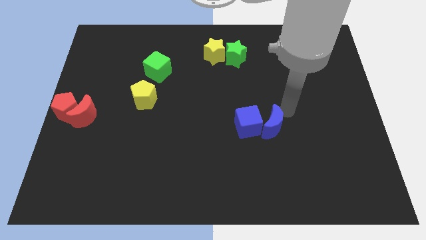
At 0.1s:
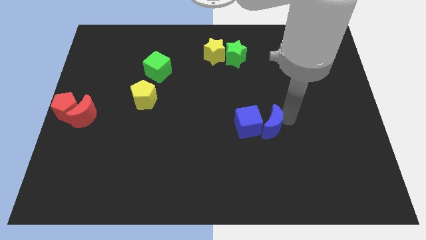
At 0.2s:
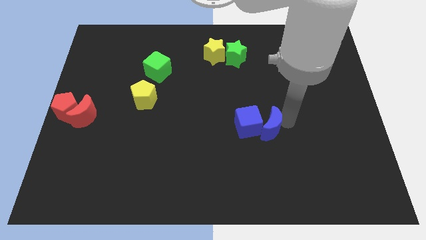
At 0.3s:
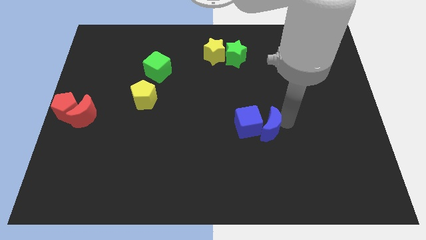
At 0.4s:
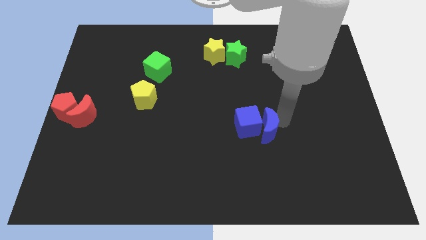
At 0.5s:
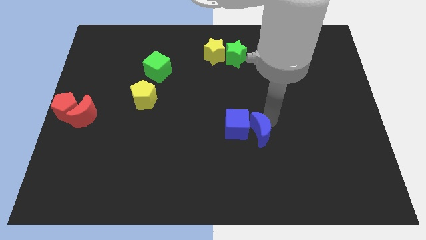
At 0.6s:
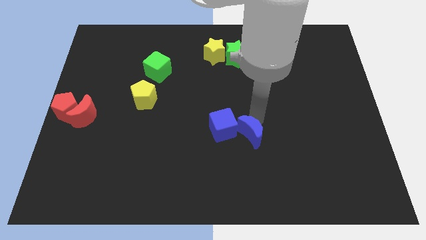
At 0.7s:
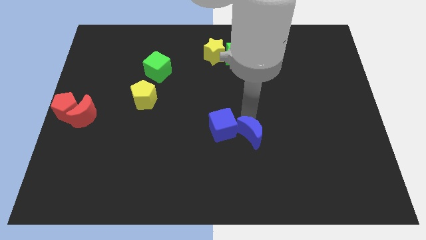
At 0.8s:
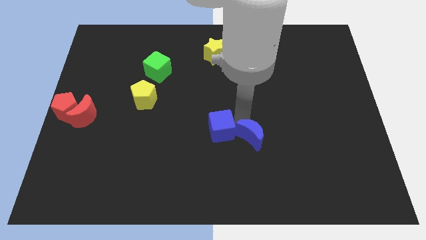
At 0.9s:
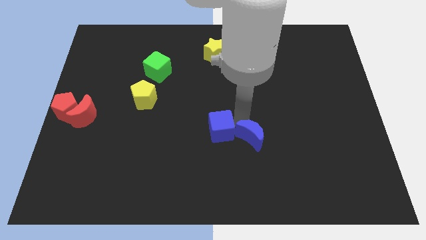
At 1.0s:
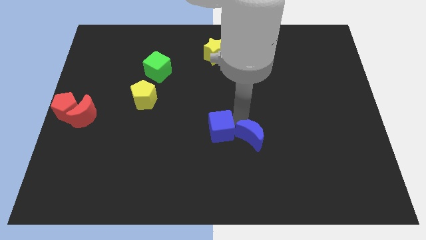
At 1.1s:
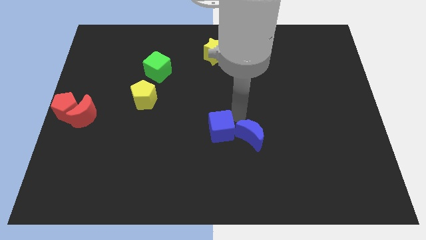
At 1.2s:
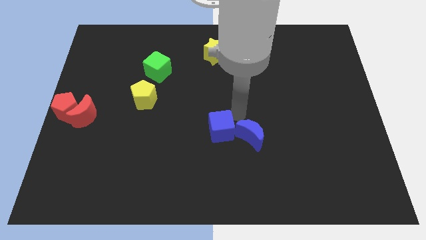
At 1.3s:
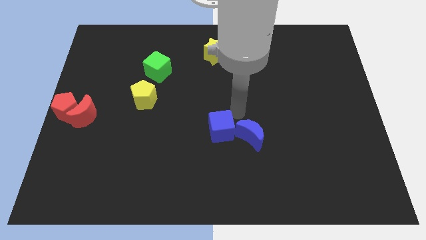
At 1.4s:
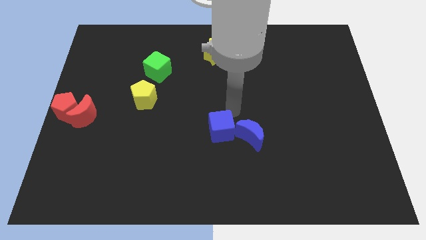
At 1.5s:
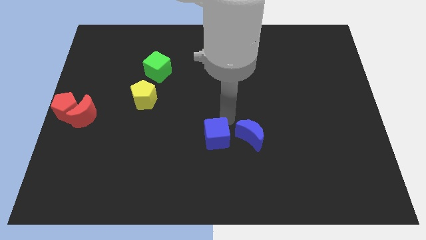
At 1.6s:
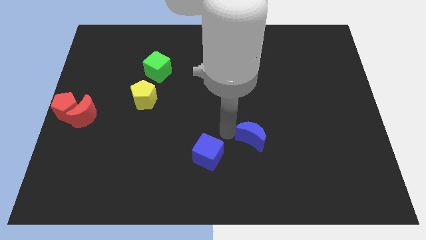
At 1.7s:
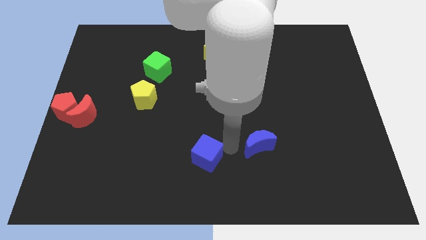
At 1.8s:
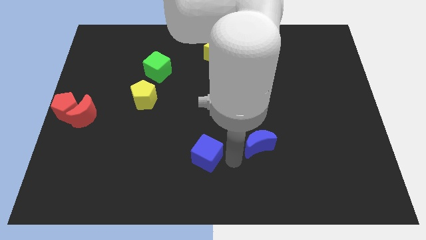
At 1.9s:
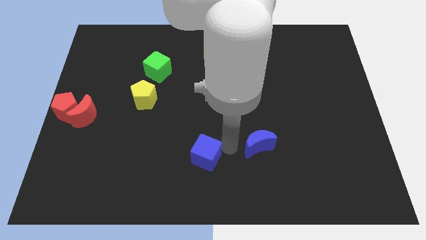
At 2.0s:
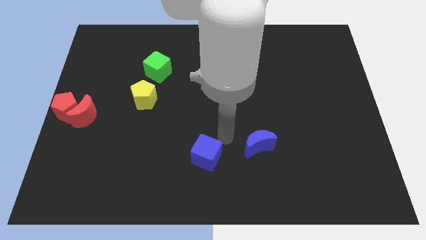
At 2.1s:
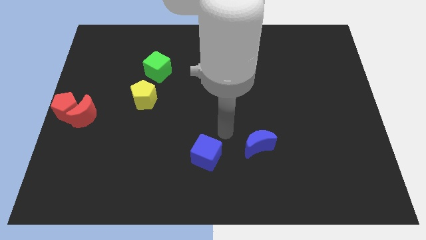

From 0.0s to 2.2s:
separate both the blue cube and the blue crescent

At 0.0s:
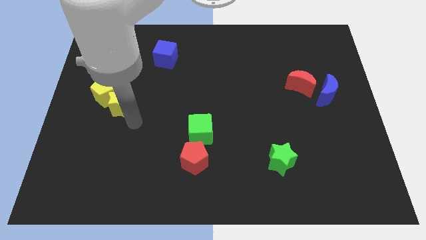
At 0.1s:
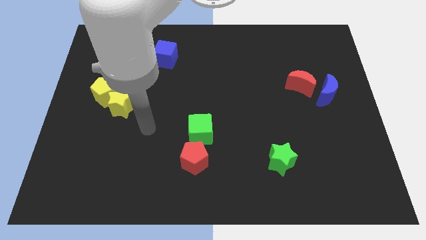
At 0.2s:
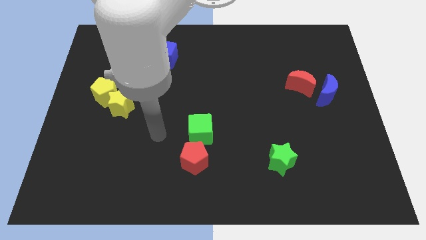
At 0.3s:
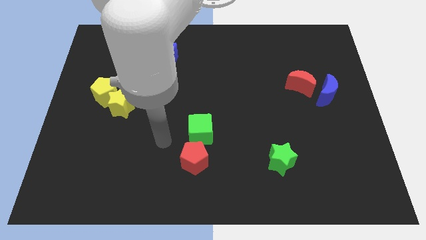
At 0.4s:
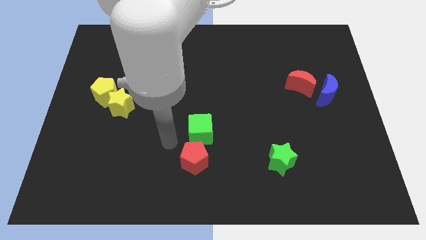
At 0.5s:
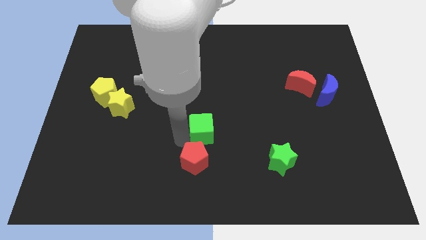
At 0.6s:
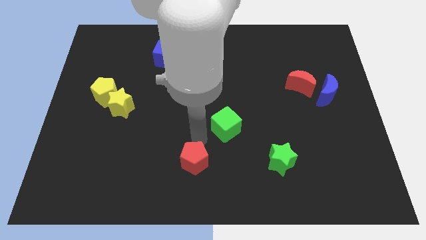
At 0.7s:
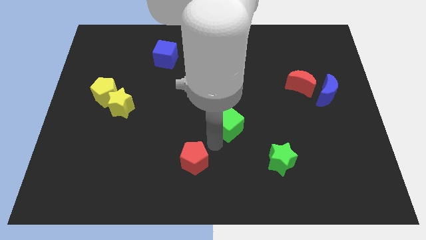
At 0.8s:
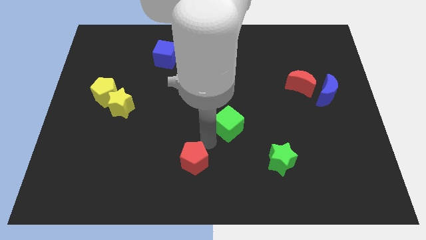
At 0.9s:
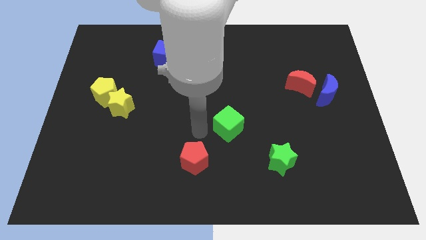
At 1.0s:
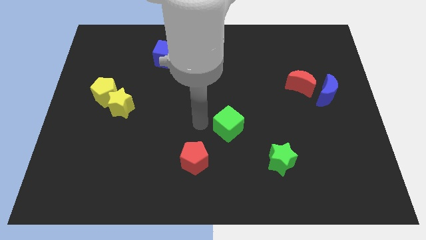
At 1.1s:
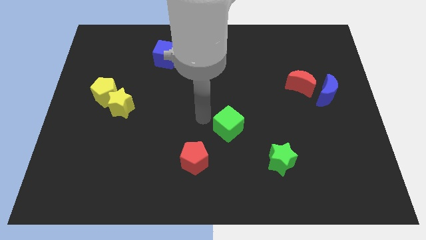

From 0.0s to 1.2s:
move your arm away from the yellow star

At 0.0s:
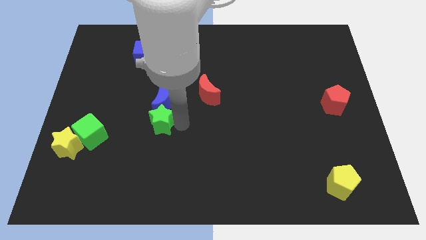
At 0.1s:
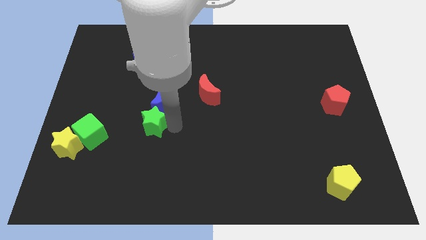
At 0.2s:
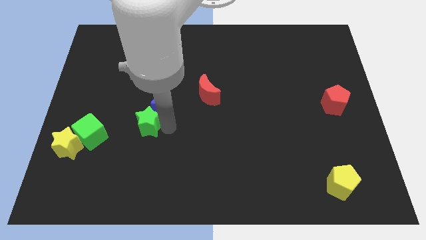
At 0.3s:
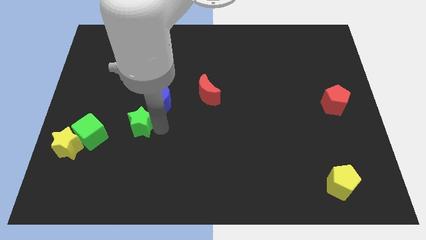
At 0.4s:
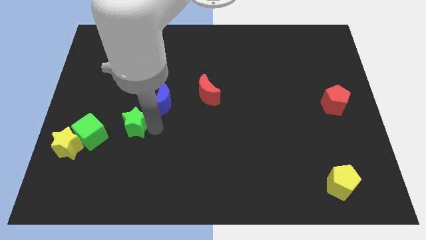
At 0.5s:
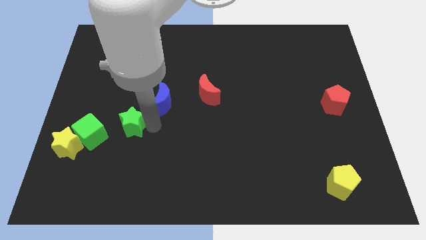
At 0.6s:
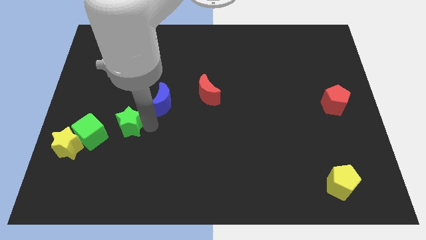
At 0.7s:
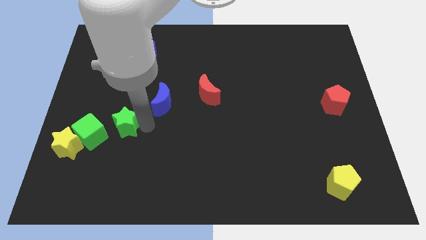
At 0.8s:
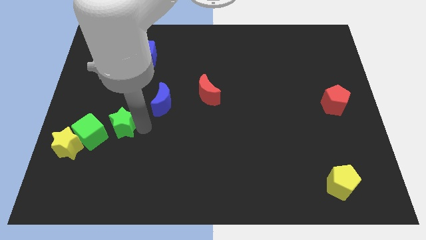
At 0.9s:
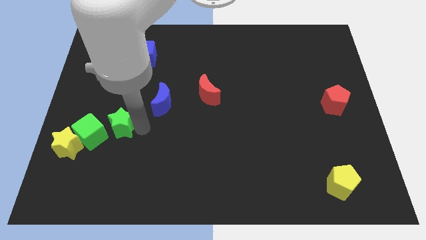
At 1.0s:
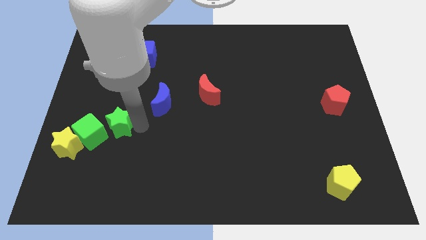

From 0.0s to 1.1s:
move green star right to the right of the green cube

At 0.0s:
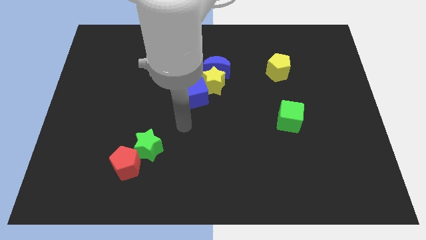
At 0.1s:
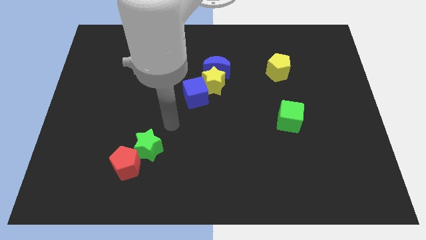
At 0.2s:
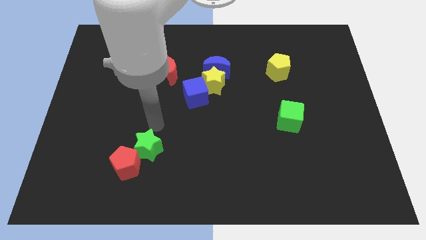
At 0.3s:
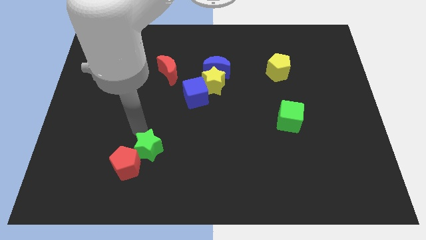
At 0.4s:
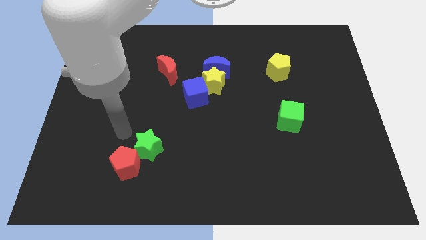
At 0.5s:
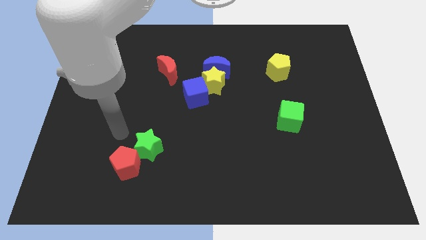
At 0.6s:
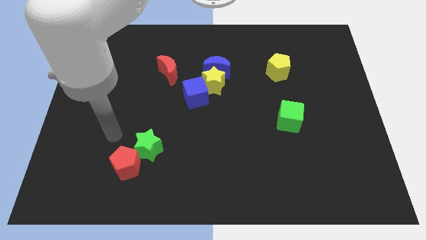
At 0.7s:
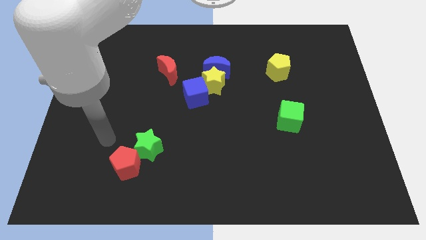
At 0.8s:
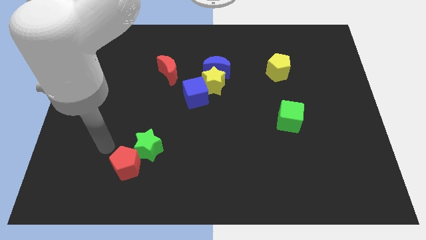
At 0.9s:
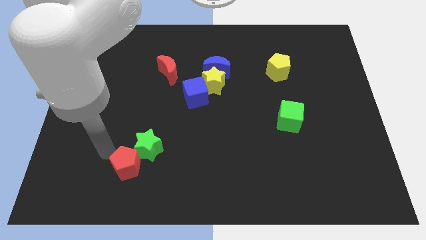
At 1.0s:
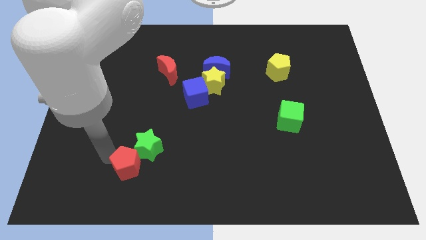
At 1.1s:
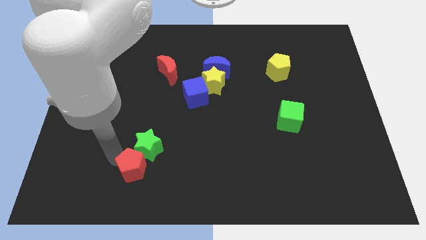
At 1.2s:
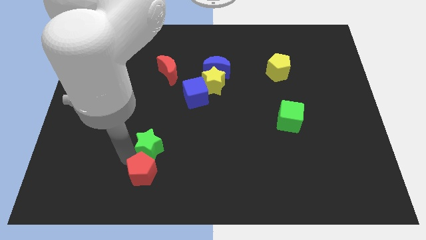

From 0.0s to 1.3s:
put the red pentagon to the bottom of the green star

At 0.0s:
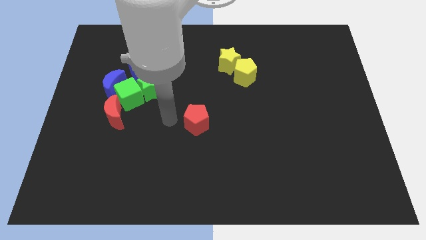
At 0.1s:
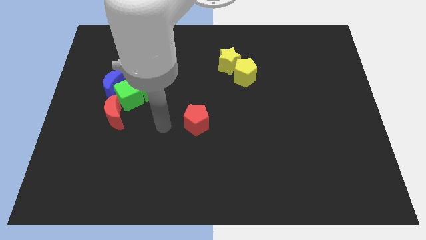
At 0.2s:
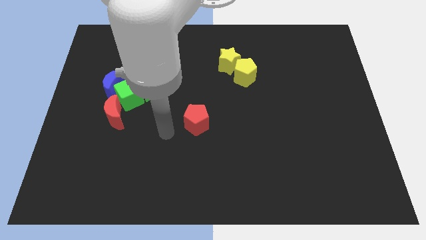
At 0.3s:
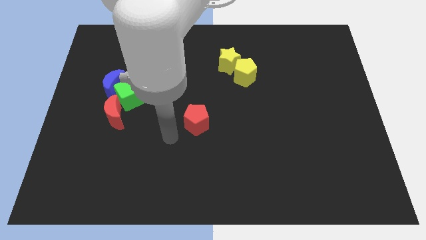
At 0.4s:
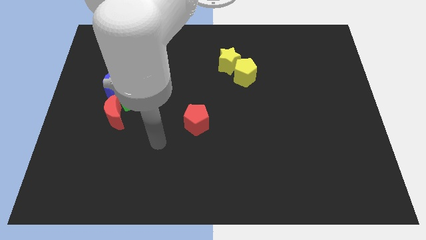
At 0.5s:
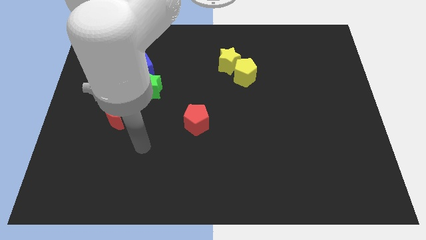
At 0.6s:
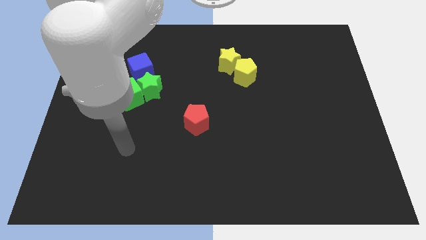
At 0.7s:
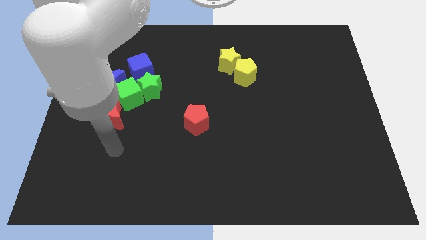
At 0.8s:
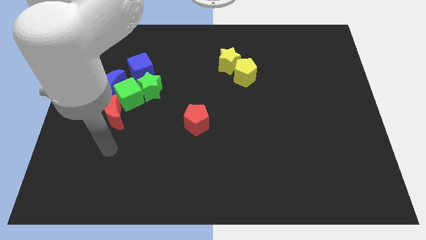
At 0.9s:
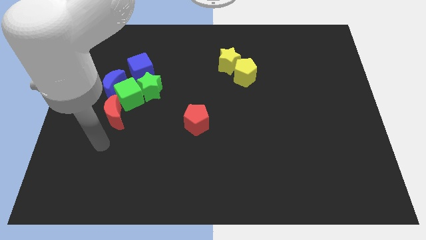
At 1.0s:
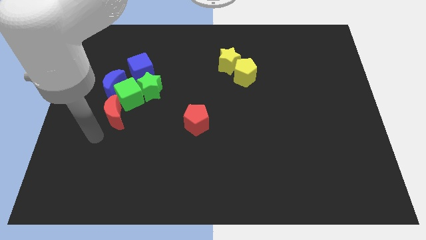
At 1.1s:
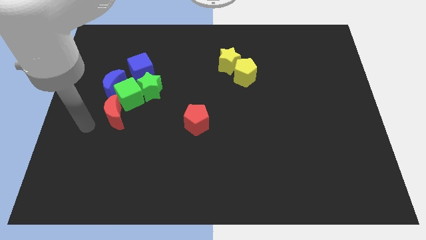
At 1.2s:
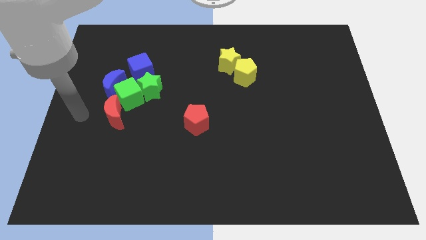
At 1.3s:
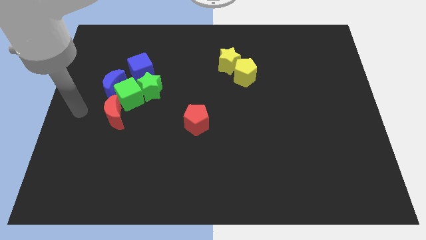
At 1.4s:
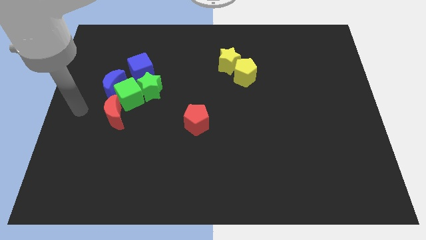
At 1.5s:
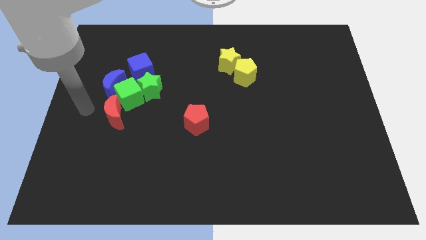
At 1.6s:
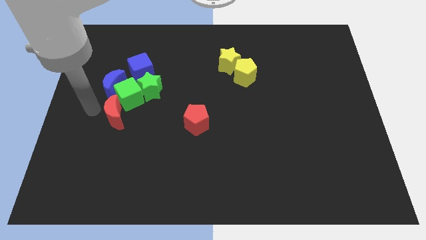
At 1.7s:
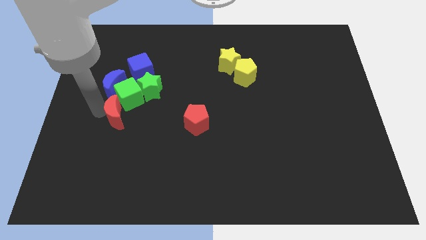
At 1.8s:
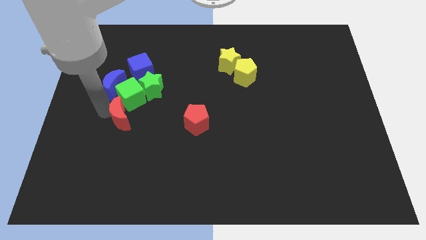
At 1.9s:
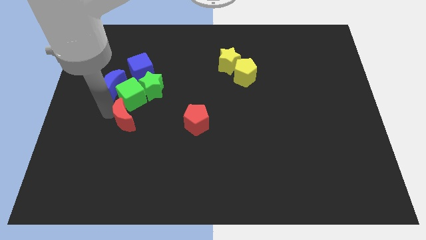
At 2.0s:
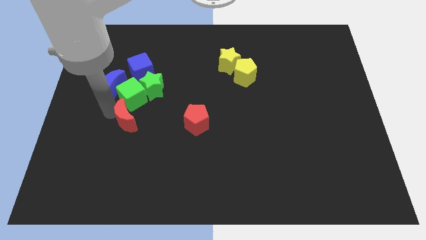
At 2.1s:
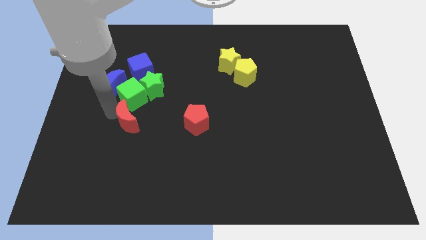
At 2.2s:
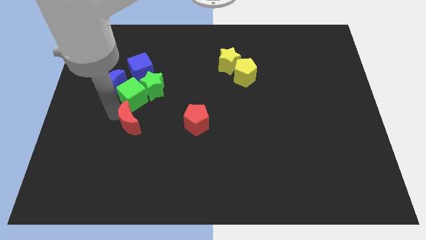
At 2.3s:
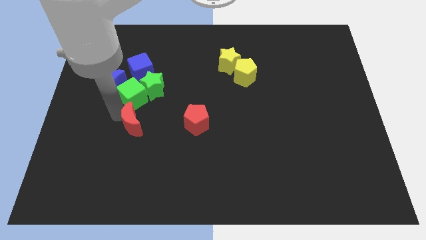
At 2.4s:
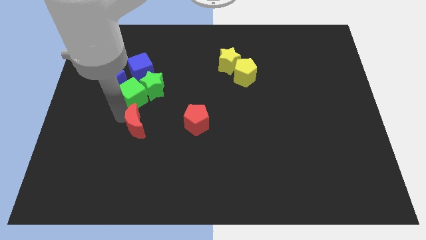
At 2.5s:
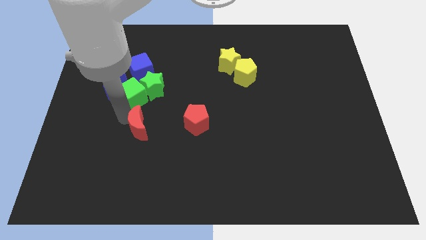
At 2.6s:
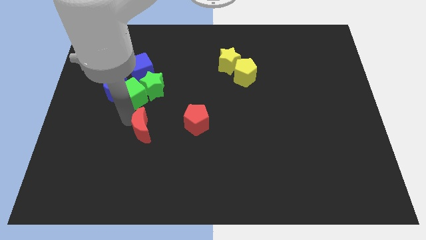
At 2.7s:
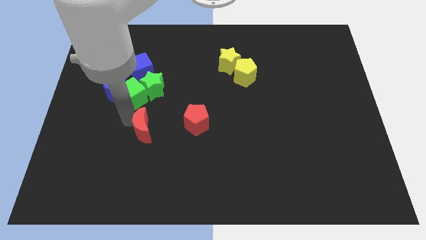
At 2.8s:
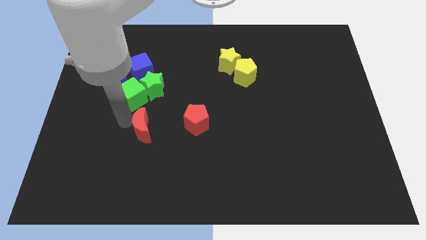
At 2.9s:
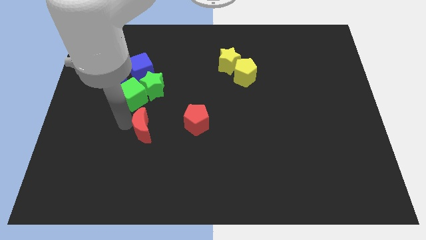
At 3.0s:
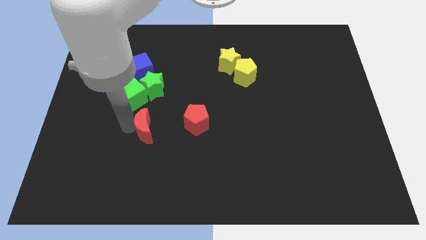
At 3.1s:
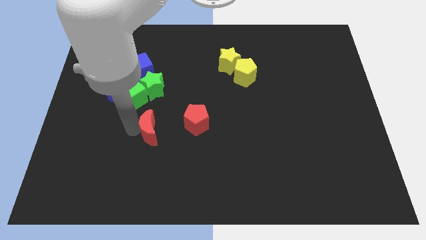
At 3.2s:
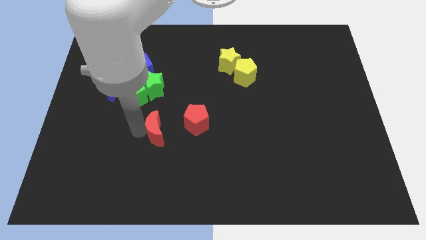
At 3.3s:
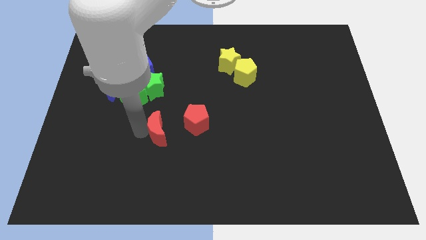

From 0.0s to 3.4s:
bring the red moon towards the left side of the red pentagon
